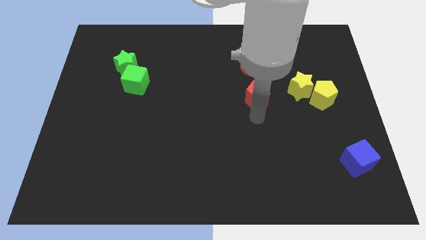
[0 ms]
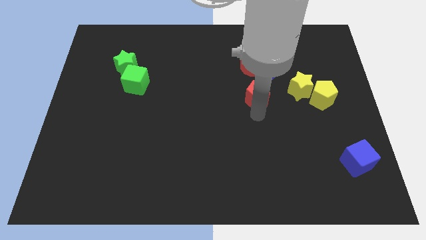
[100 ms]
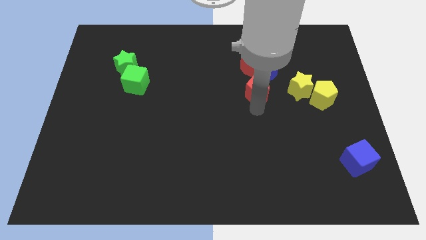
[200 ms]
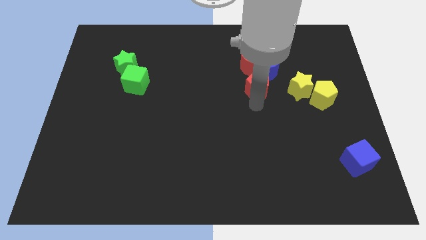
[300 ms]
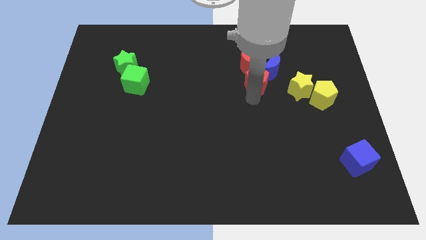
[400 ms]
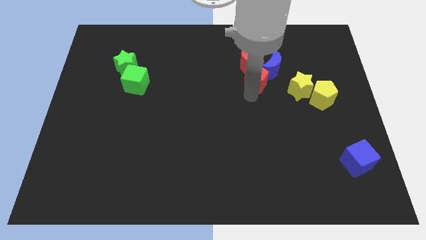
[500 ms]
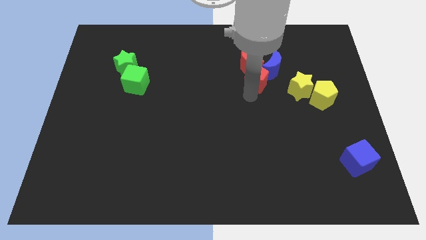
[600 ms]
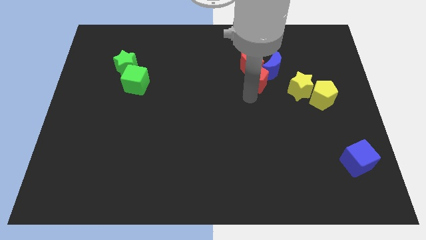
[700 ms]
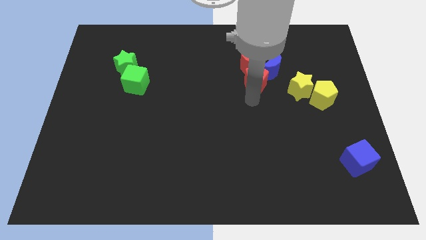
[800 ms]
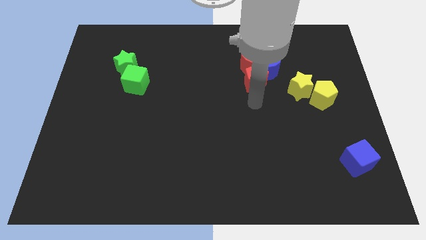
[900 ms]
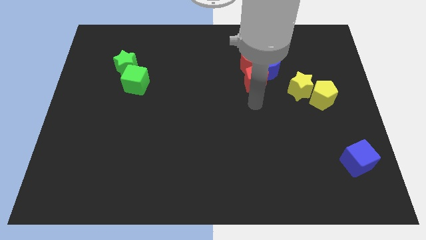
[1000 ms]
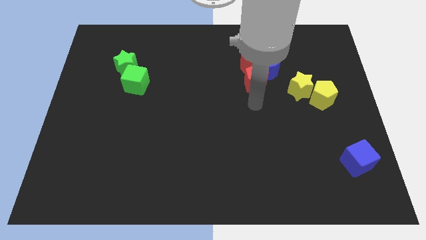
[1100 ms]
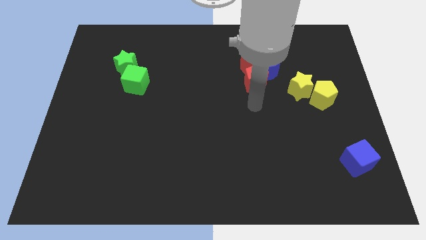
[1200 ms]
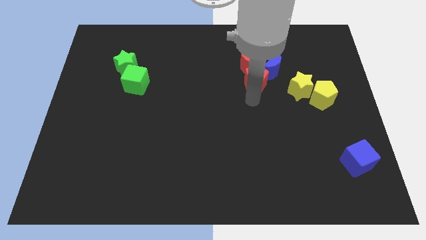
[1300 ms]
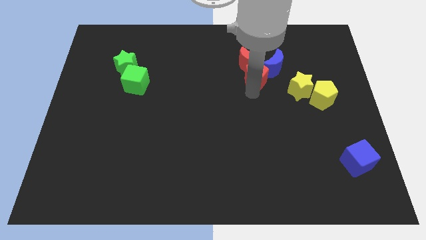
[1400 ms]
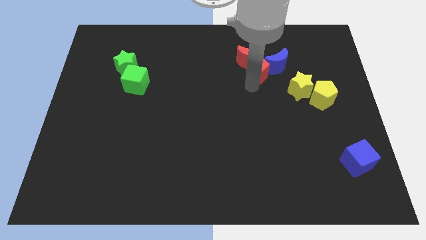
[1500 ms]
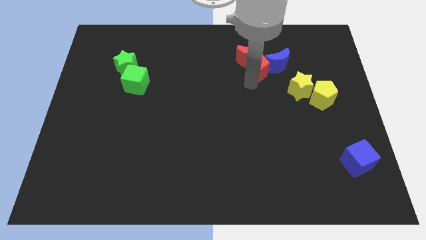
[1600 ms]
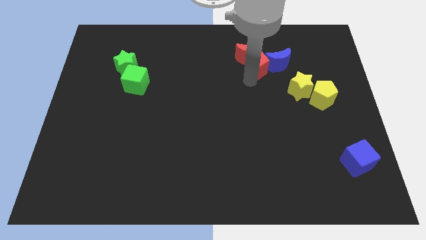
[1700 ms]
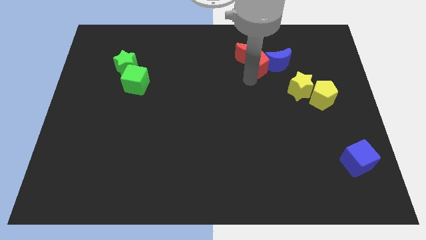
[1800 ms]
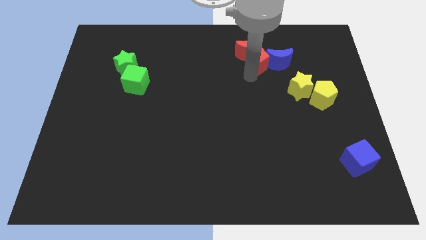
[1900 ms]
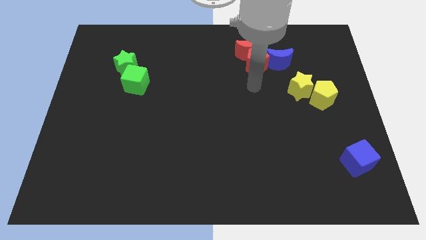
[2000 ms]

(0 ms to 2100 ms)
slide the red pentagon into the left of blue crescent

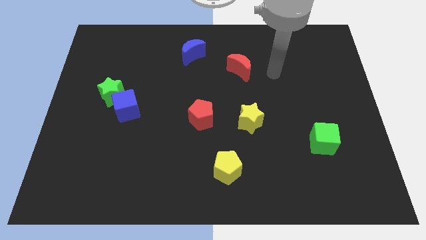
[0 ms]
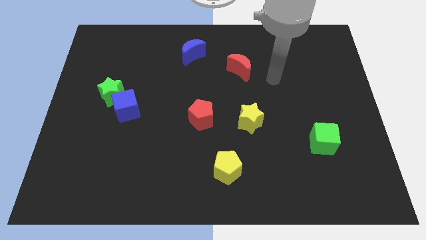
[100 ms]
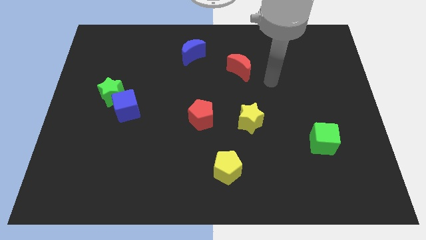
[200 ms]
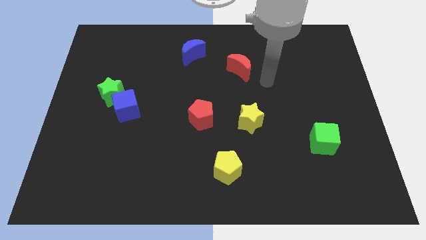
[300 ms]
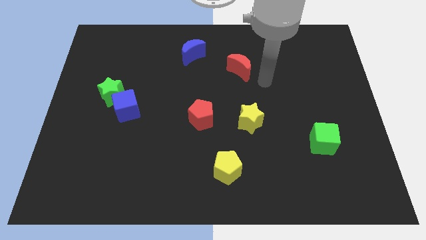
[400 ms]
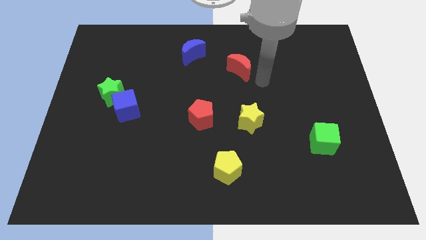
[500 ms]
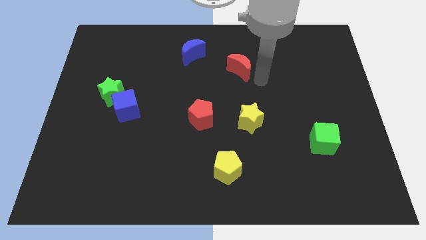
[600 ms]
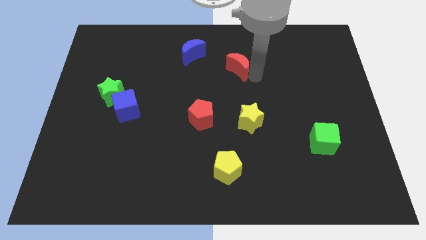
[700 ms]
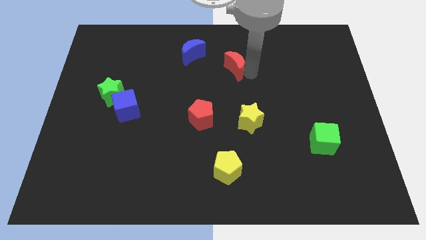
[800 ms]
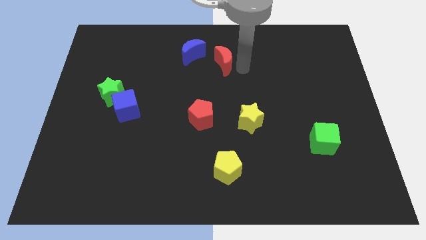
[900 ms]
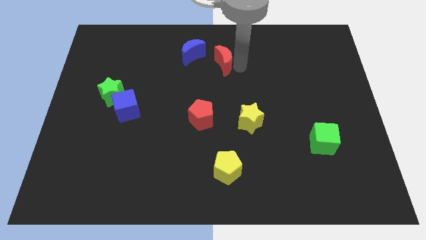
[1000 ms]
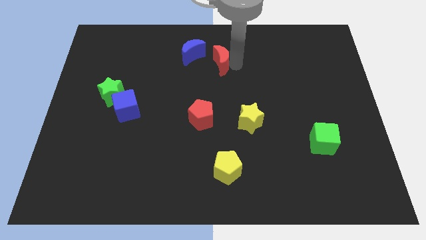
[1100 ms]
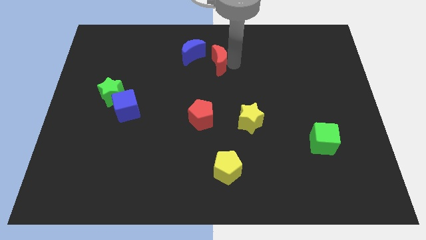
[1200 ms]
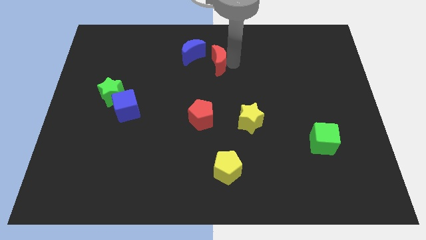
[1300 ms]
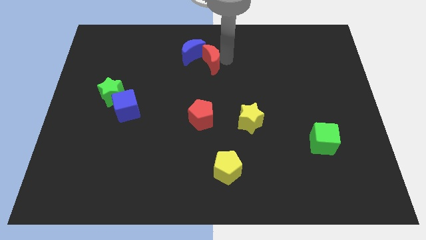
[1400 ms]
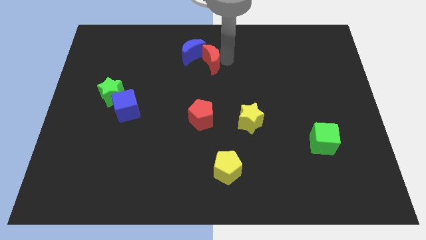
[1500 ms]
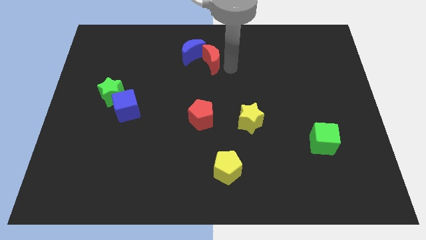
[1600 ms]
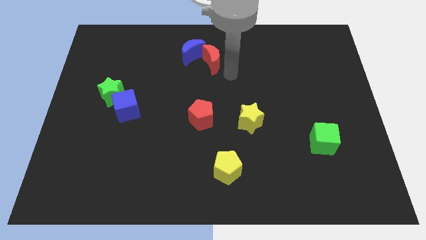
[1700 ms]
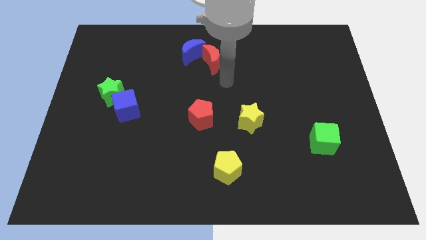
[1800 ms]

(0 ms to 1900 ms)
push the red crescent into the blue crescent

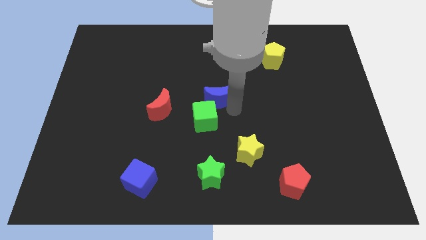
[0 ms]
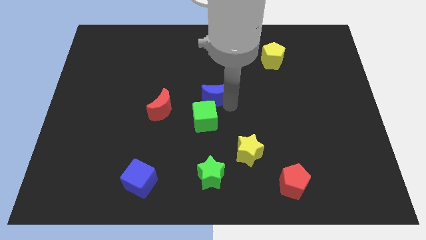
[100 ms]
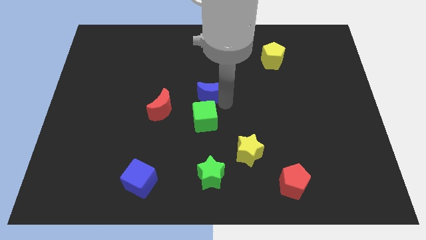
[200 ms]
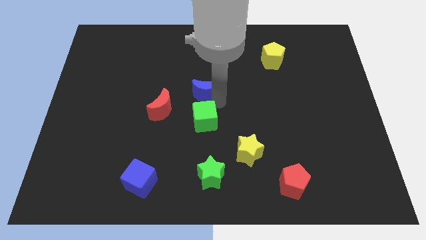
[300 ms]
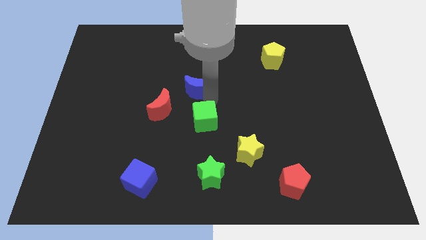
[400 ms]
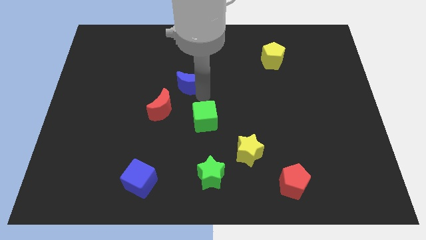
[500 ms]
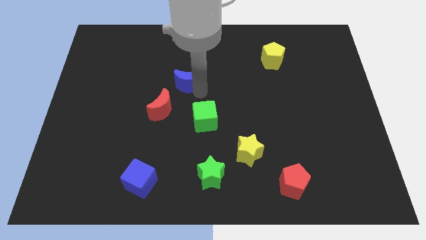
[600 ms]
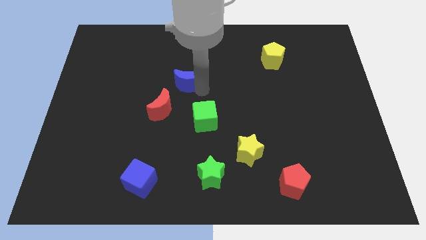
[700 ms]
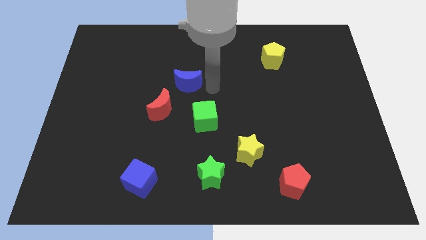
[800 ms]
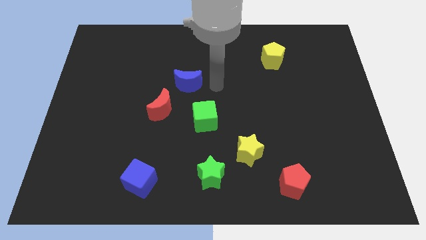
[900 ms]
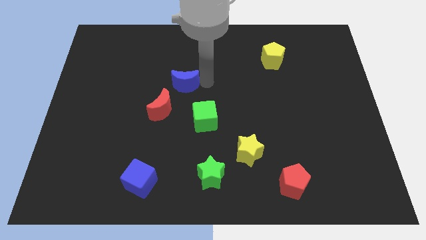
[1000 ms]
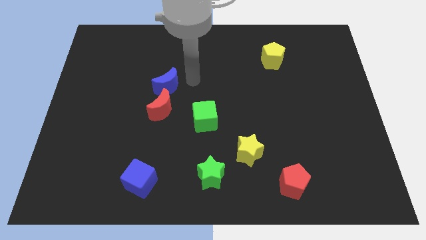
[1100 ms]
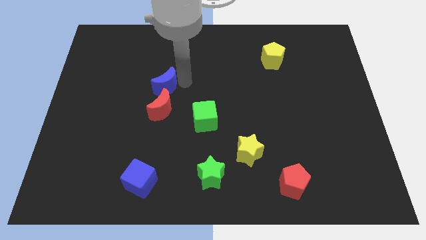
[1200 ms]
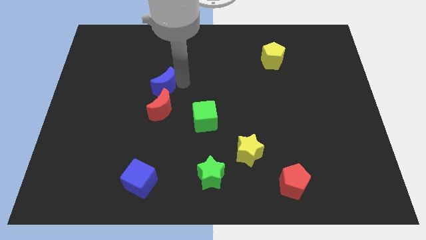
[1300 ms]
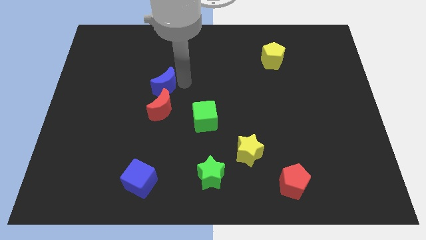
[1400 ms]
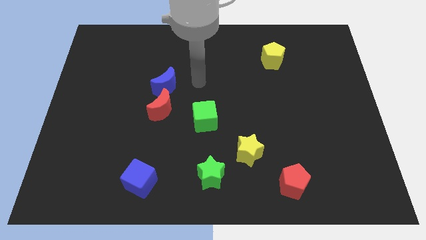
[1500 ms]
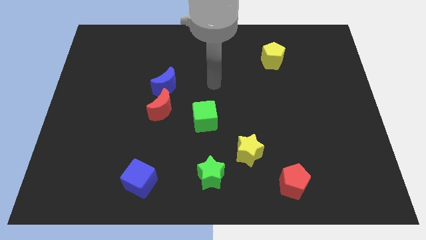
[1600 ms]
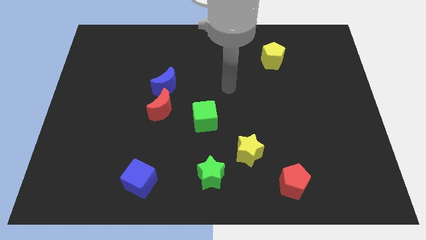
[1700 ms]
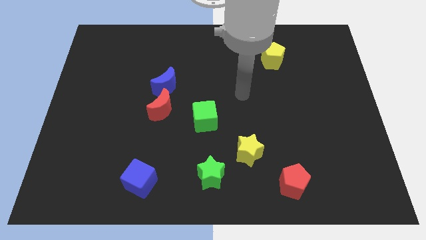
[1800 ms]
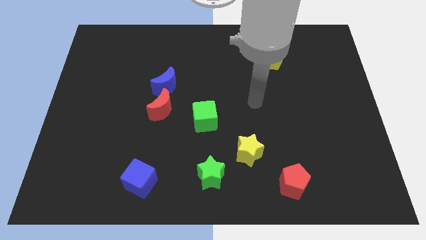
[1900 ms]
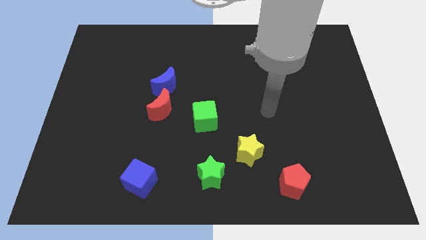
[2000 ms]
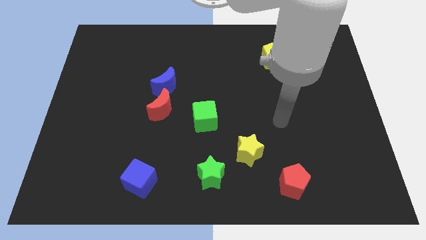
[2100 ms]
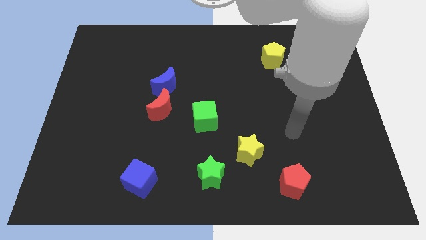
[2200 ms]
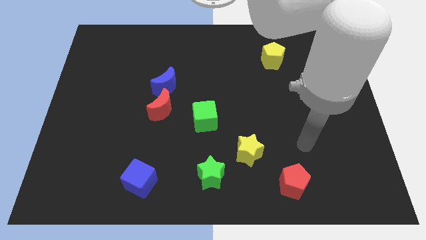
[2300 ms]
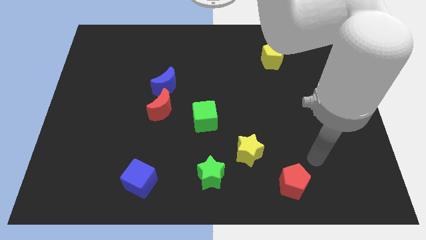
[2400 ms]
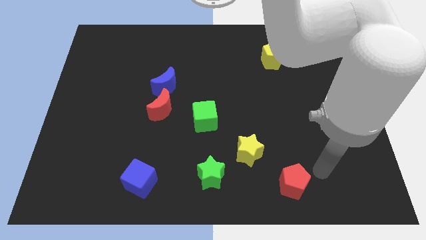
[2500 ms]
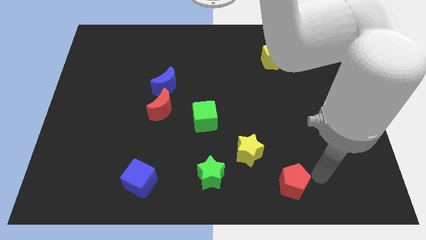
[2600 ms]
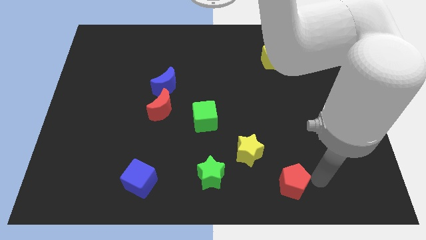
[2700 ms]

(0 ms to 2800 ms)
push the blue crescent to the top of red crescent

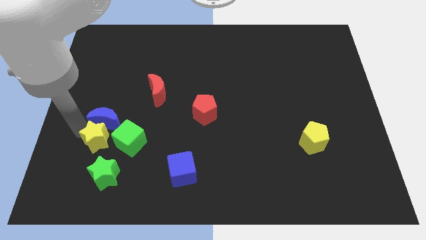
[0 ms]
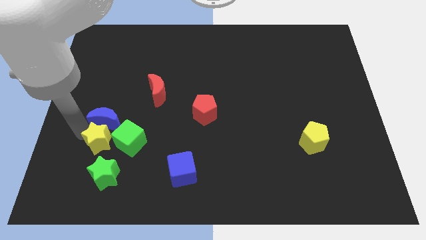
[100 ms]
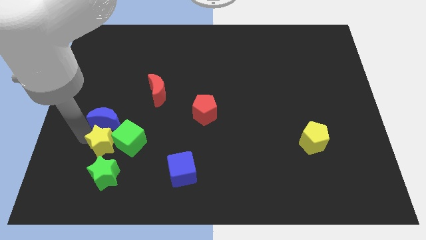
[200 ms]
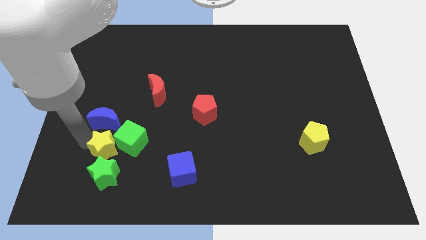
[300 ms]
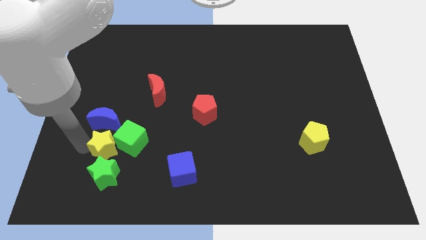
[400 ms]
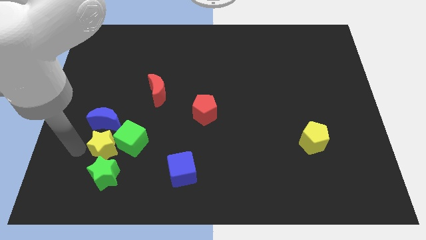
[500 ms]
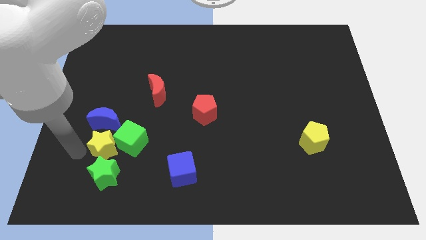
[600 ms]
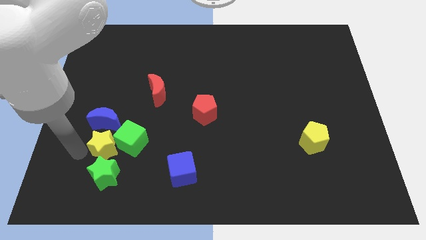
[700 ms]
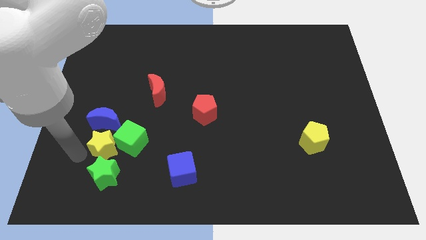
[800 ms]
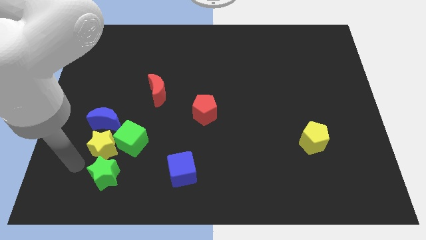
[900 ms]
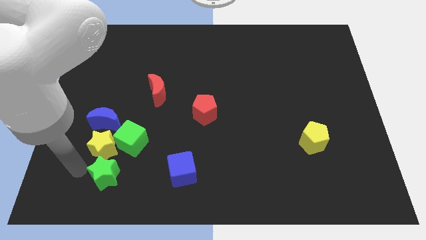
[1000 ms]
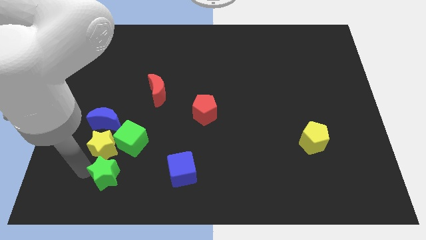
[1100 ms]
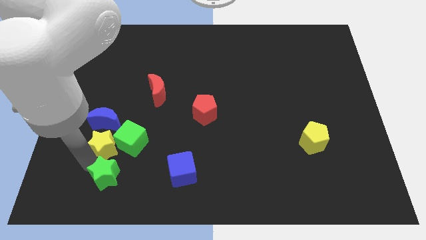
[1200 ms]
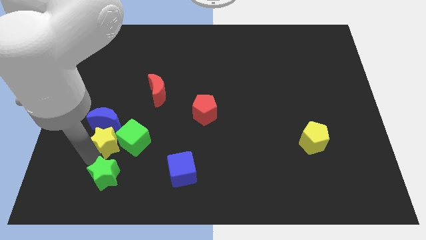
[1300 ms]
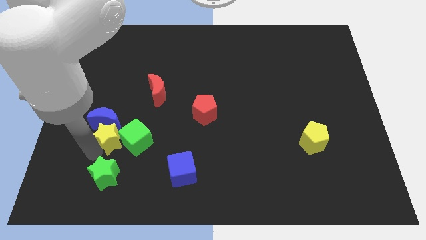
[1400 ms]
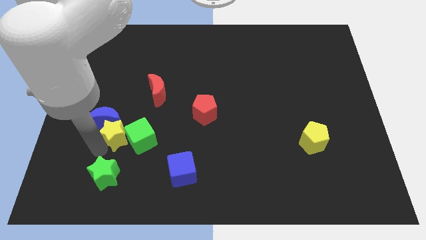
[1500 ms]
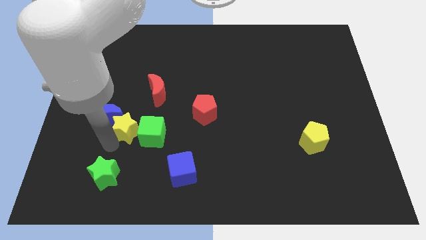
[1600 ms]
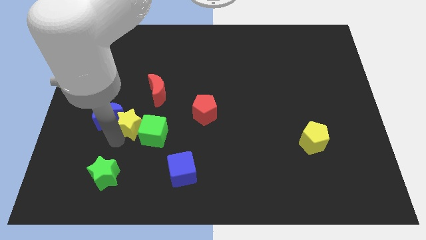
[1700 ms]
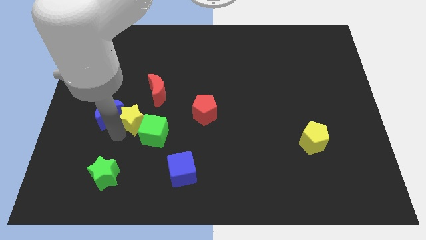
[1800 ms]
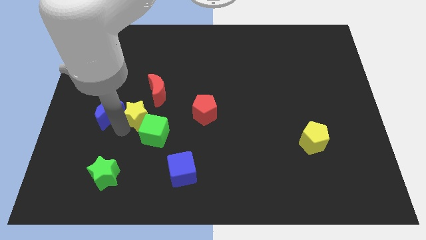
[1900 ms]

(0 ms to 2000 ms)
push the yellow star between green cube and blue moon
